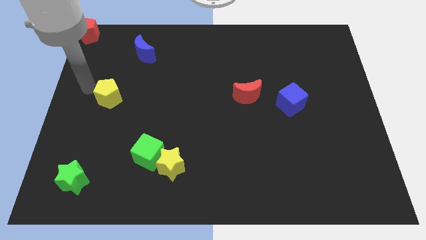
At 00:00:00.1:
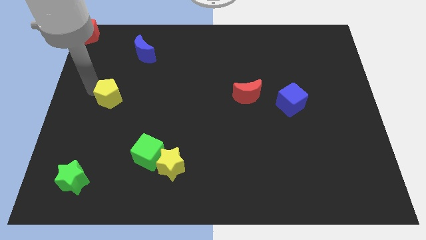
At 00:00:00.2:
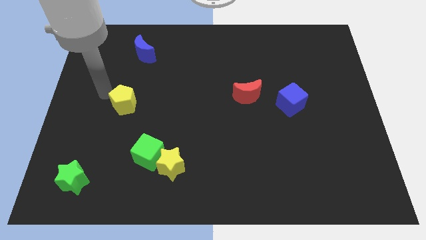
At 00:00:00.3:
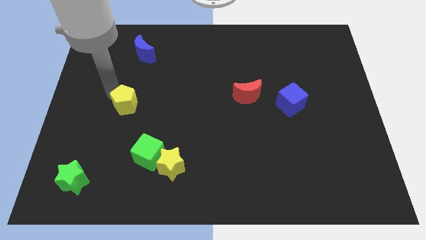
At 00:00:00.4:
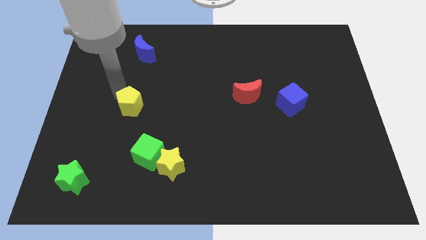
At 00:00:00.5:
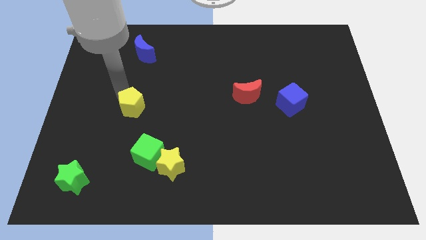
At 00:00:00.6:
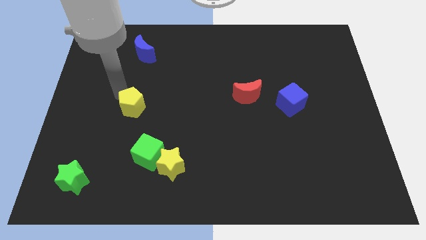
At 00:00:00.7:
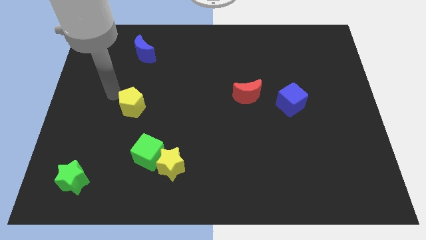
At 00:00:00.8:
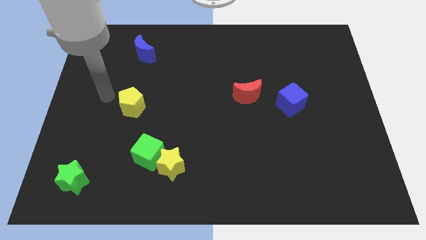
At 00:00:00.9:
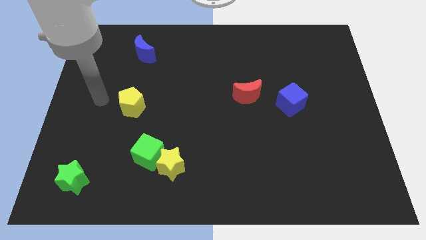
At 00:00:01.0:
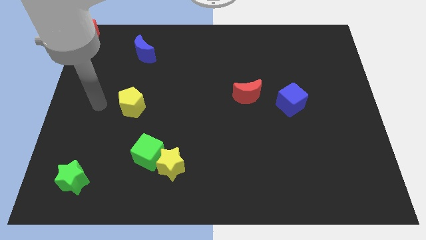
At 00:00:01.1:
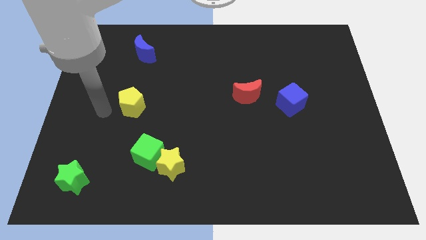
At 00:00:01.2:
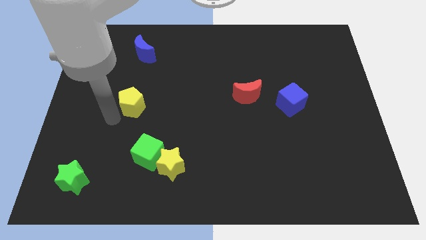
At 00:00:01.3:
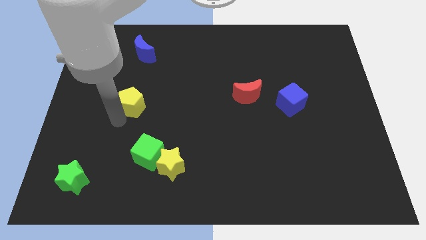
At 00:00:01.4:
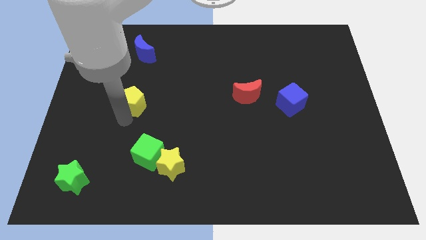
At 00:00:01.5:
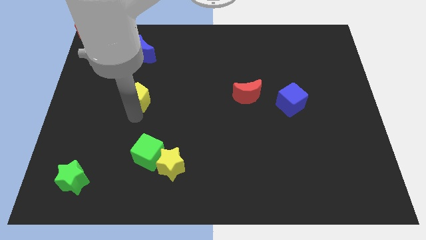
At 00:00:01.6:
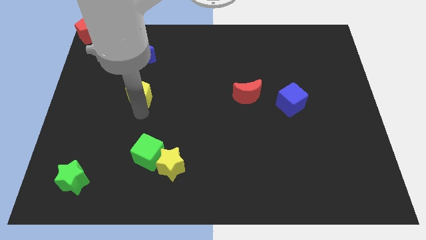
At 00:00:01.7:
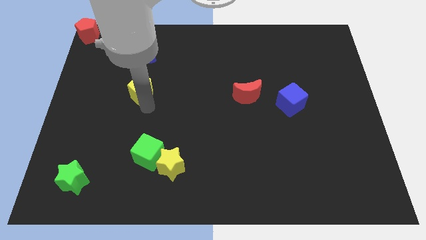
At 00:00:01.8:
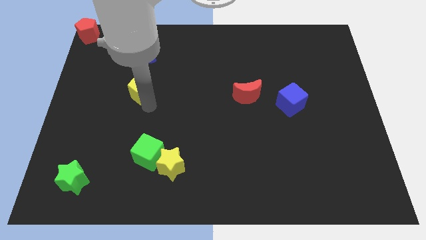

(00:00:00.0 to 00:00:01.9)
put the yellow pentagon above the green cube

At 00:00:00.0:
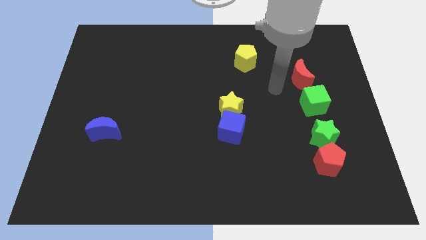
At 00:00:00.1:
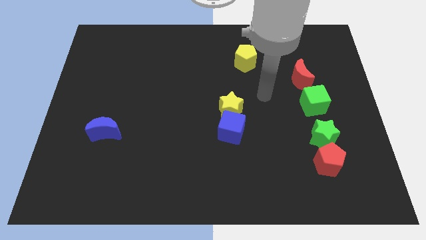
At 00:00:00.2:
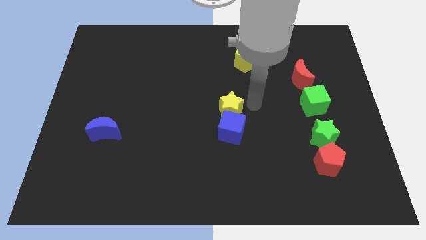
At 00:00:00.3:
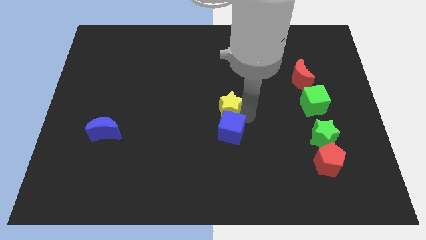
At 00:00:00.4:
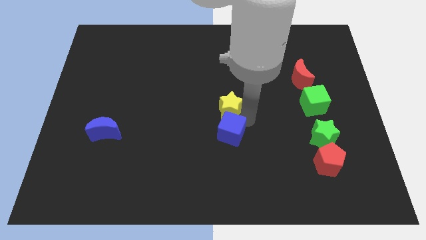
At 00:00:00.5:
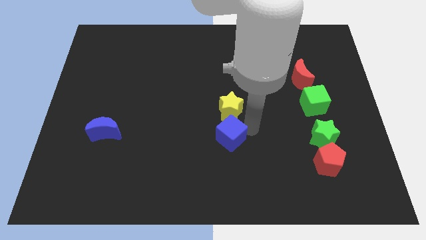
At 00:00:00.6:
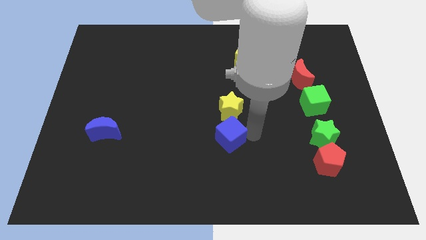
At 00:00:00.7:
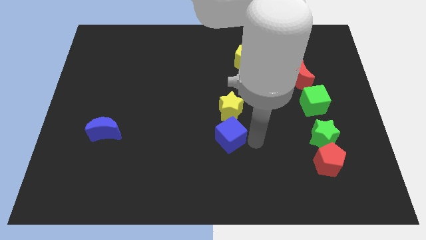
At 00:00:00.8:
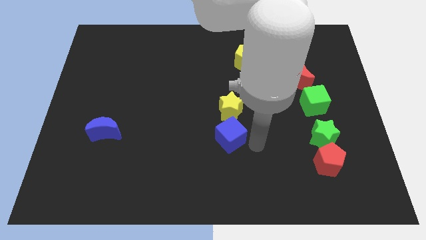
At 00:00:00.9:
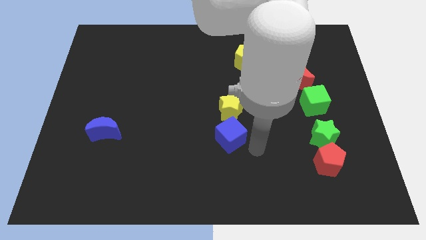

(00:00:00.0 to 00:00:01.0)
tap the blue cube

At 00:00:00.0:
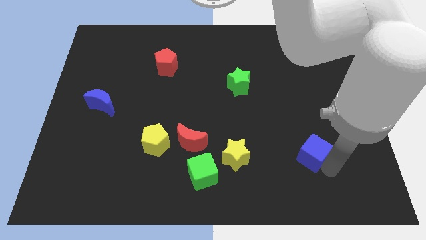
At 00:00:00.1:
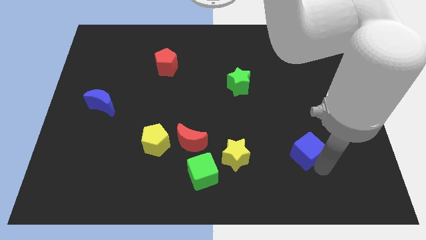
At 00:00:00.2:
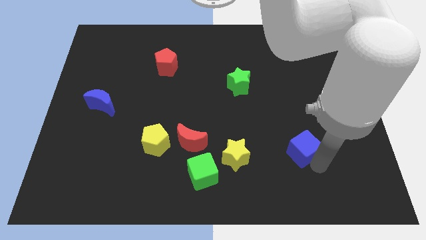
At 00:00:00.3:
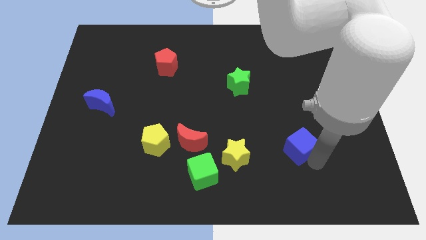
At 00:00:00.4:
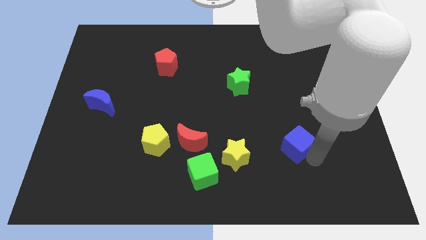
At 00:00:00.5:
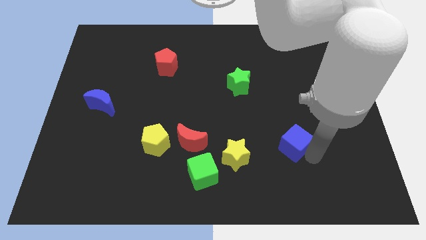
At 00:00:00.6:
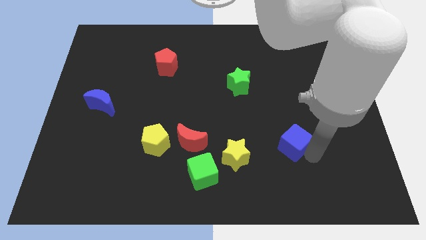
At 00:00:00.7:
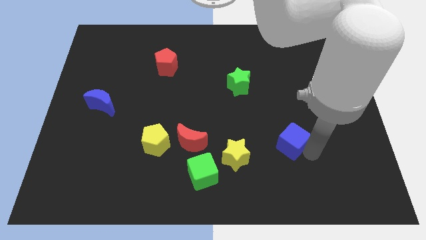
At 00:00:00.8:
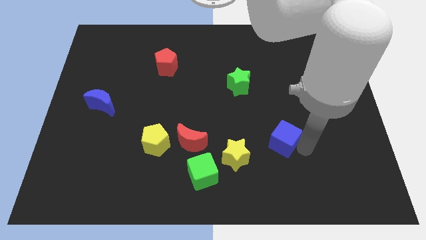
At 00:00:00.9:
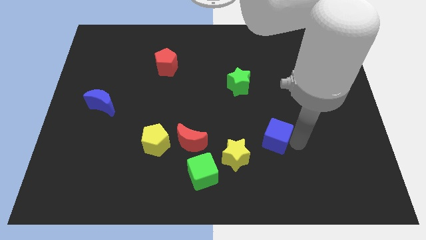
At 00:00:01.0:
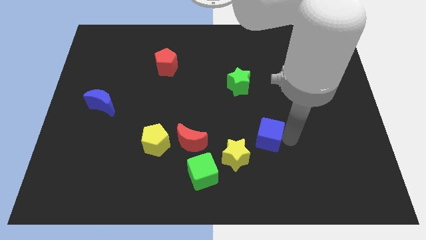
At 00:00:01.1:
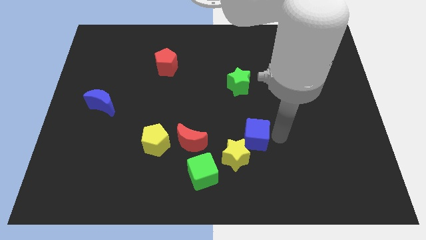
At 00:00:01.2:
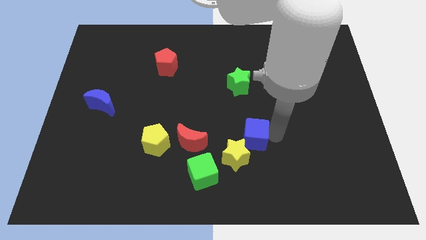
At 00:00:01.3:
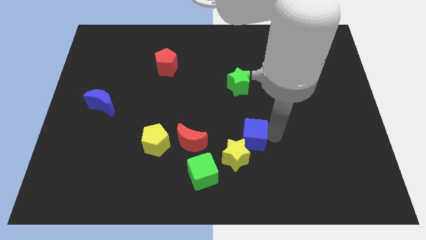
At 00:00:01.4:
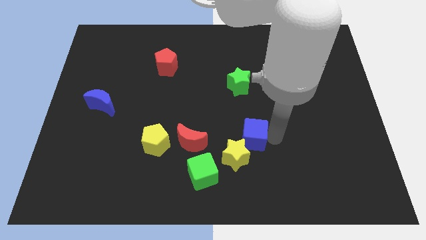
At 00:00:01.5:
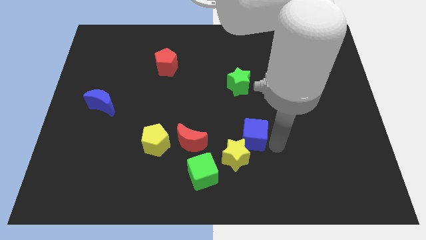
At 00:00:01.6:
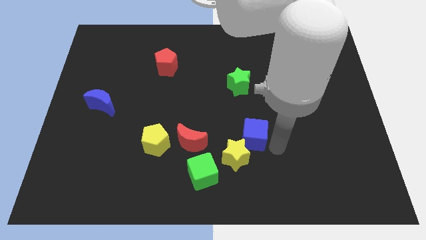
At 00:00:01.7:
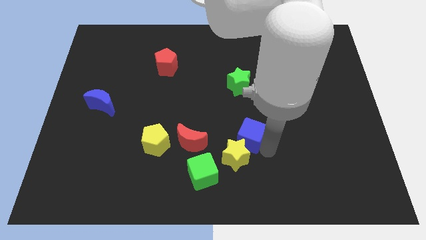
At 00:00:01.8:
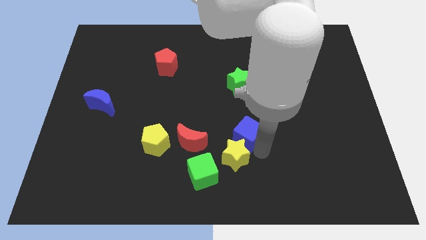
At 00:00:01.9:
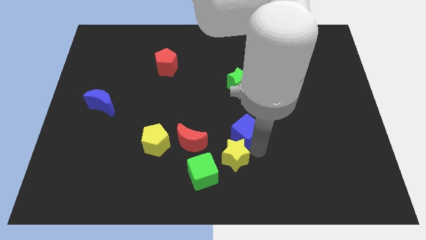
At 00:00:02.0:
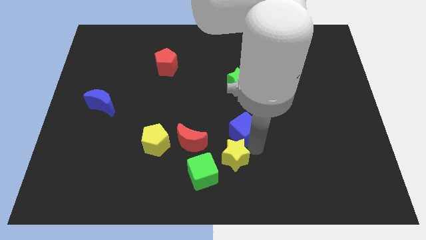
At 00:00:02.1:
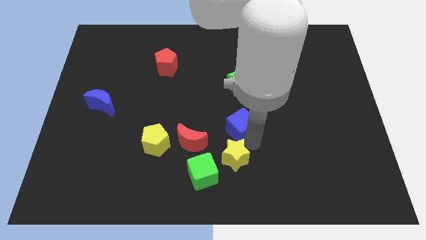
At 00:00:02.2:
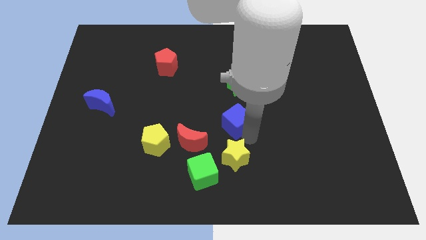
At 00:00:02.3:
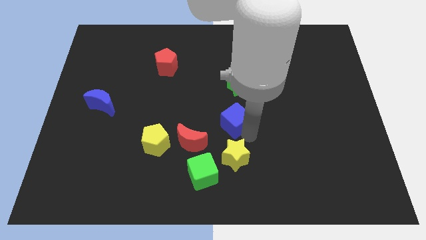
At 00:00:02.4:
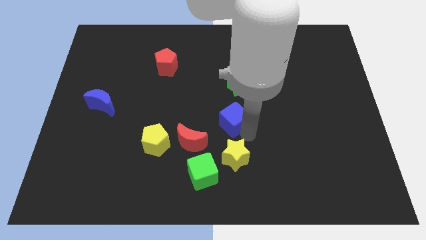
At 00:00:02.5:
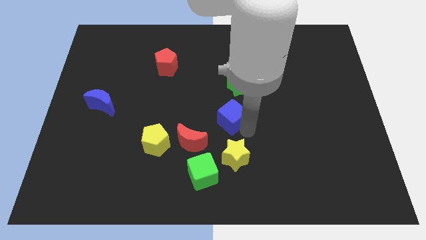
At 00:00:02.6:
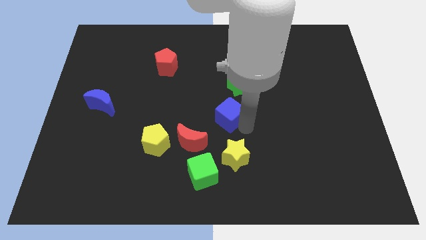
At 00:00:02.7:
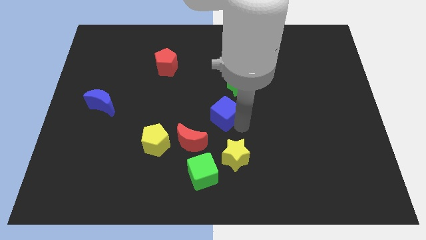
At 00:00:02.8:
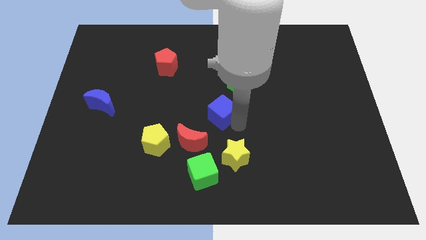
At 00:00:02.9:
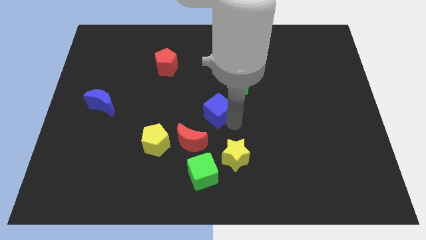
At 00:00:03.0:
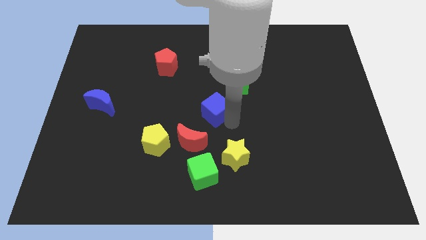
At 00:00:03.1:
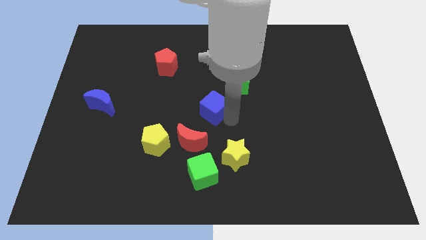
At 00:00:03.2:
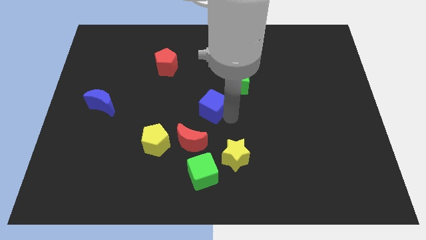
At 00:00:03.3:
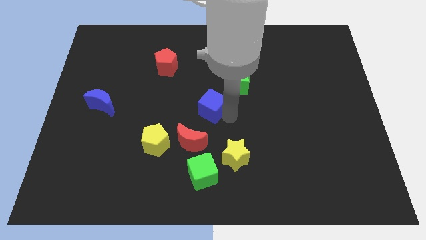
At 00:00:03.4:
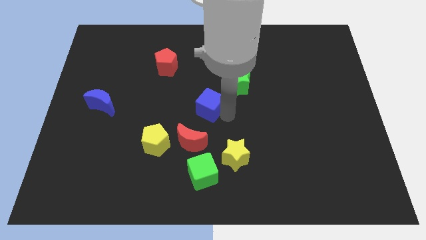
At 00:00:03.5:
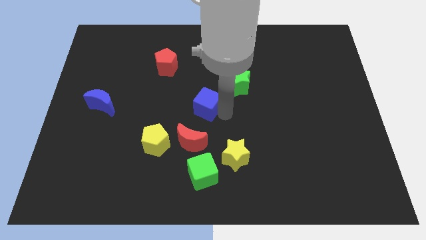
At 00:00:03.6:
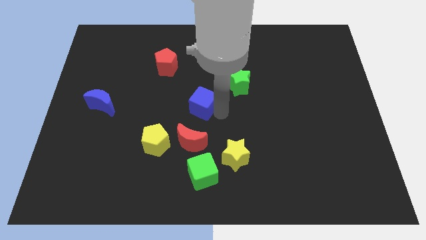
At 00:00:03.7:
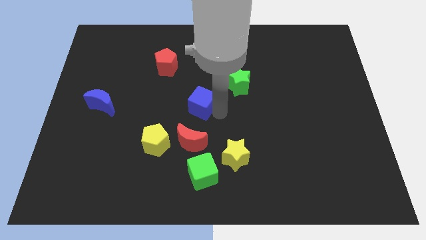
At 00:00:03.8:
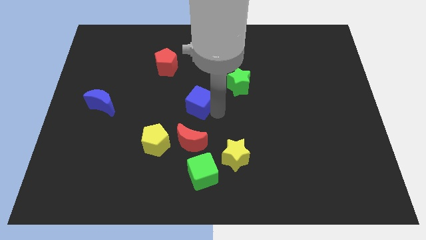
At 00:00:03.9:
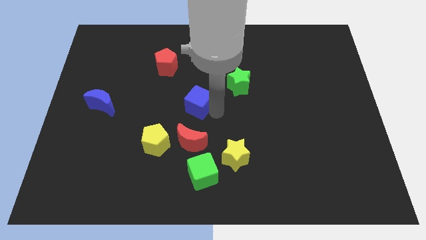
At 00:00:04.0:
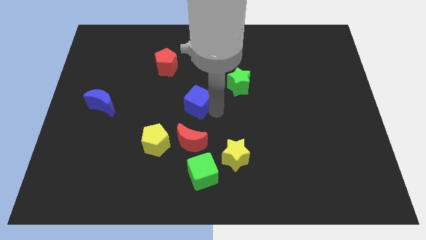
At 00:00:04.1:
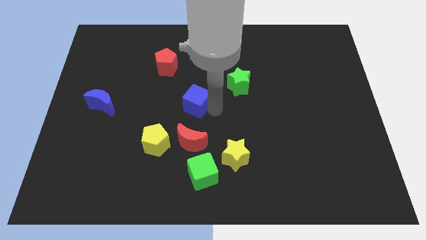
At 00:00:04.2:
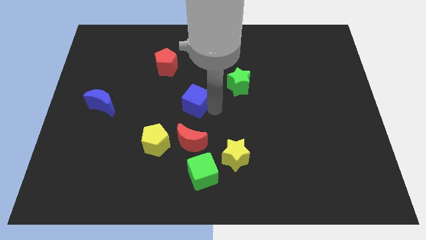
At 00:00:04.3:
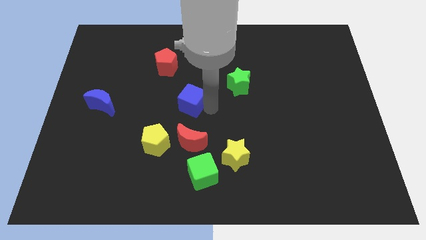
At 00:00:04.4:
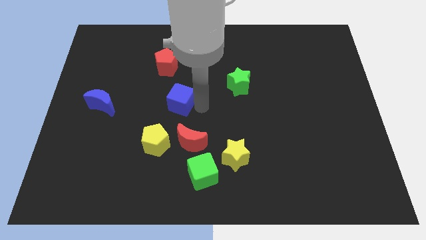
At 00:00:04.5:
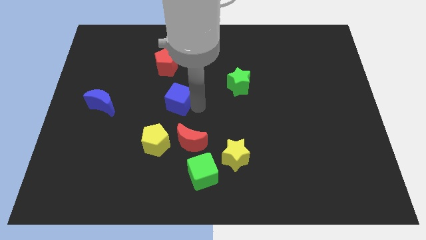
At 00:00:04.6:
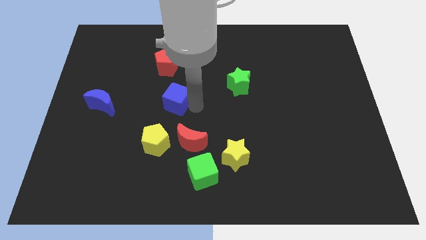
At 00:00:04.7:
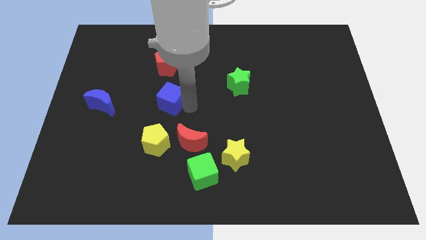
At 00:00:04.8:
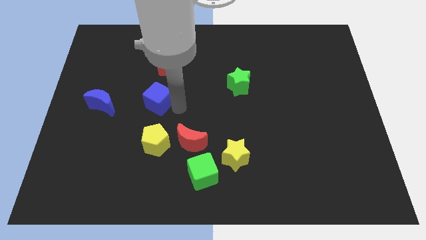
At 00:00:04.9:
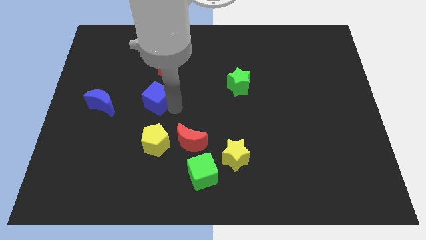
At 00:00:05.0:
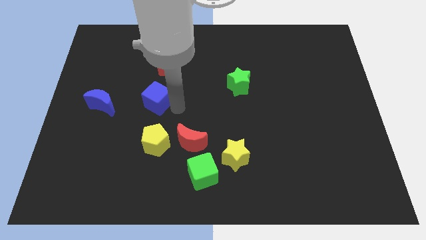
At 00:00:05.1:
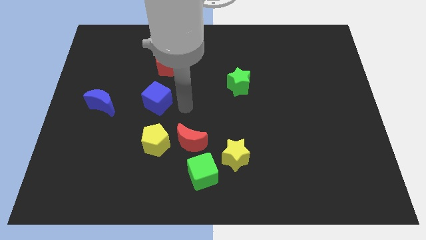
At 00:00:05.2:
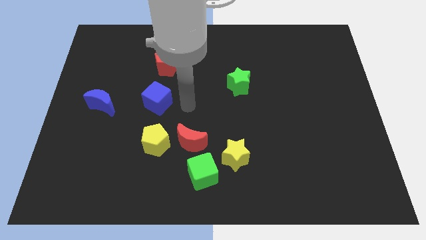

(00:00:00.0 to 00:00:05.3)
move the blue cube in between the yellow pentagon and red pentagon

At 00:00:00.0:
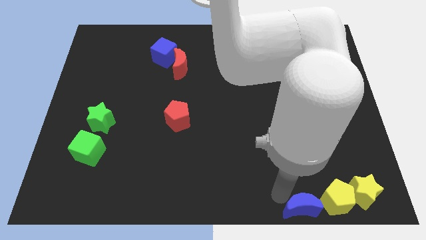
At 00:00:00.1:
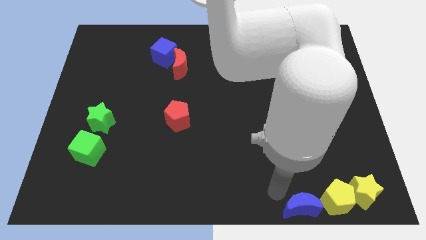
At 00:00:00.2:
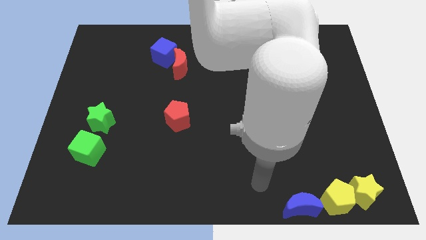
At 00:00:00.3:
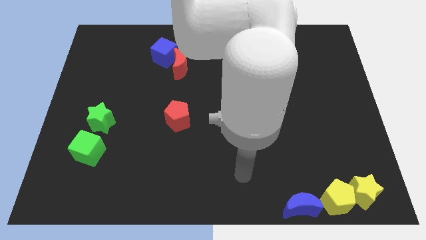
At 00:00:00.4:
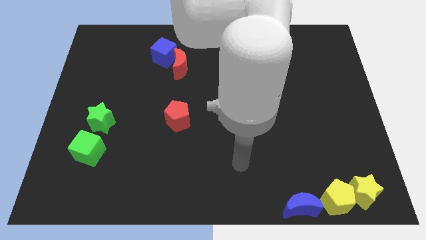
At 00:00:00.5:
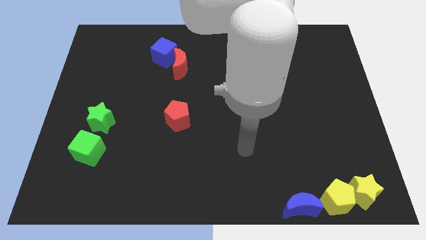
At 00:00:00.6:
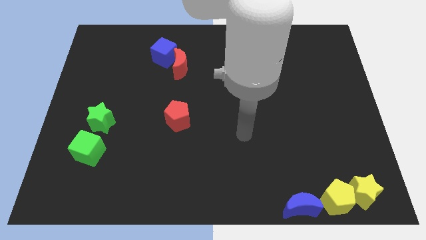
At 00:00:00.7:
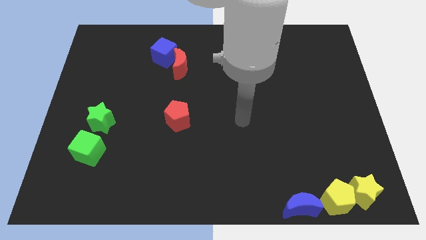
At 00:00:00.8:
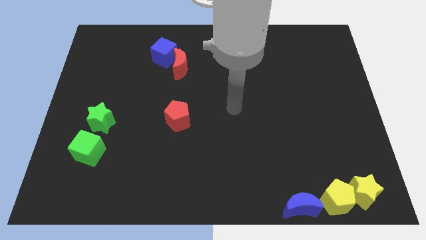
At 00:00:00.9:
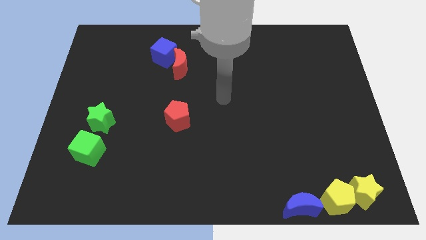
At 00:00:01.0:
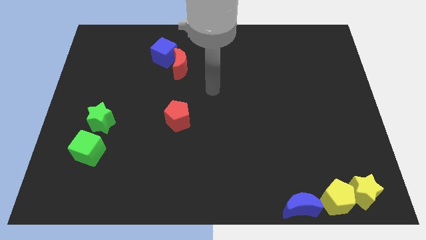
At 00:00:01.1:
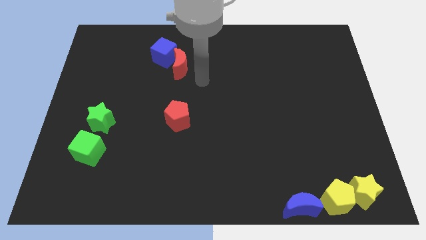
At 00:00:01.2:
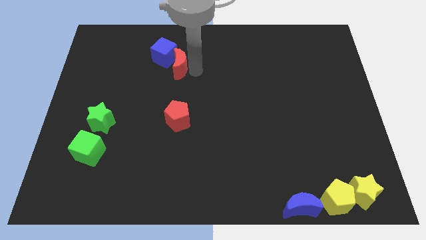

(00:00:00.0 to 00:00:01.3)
point your arm at the right of the red crescent
